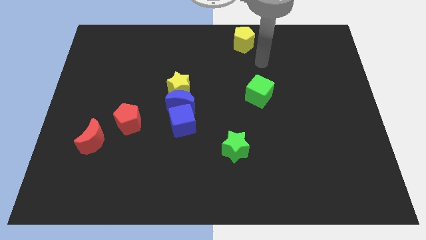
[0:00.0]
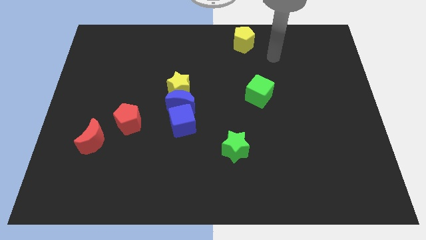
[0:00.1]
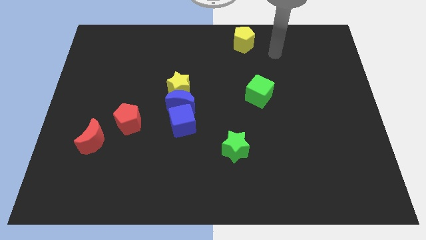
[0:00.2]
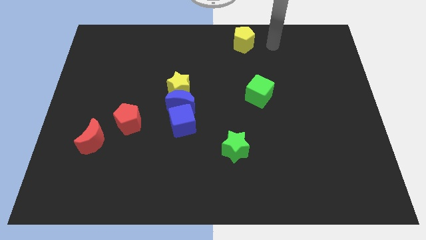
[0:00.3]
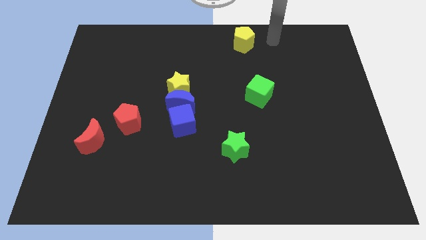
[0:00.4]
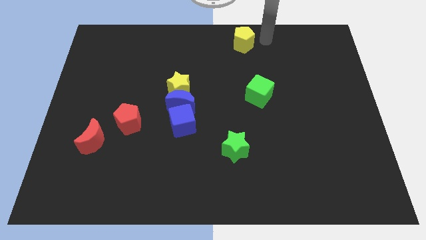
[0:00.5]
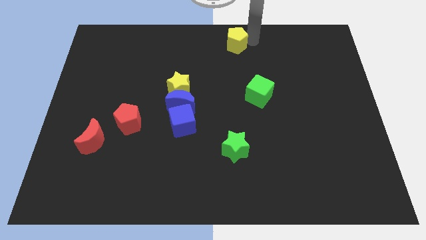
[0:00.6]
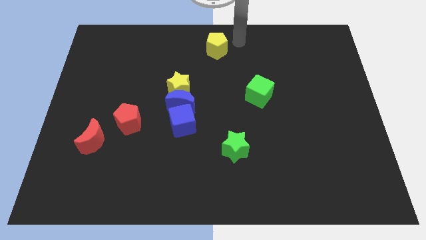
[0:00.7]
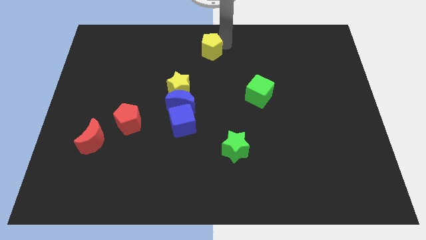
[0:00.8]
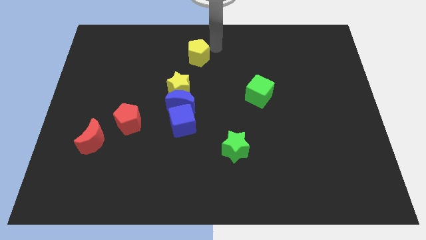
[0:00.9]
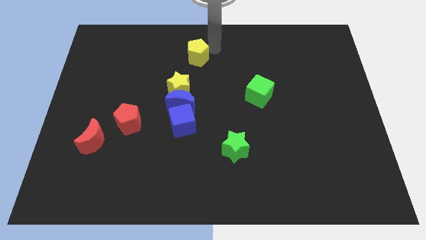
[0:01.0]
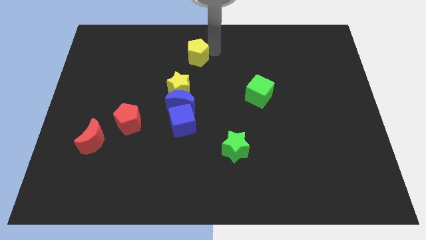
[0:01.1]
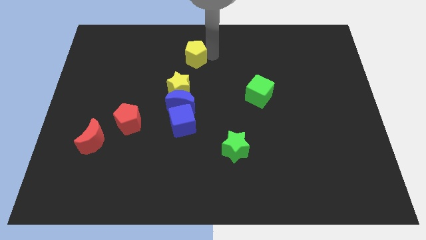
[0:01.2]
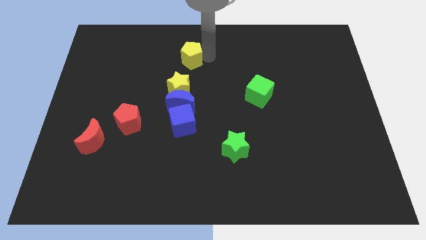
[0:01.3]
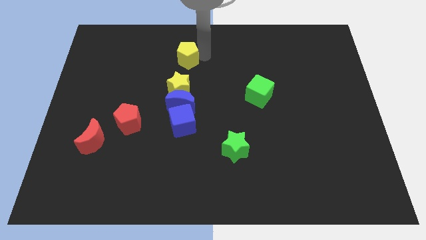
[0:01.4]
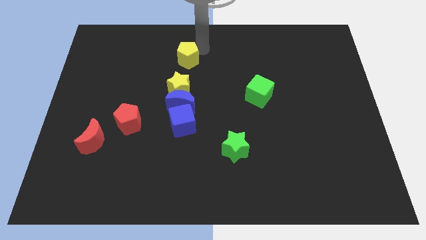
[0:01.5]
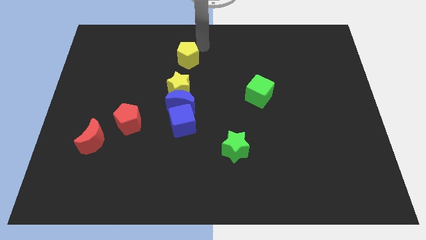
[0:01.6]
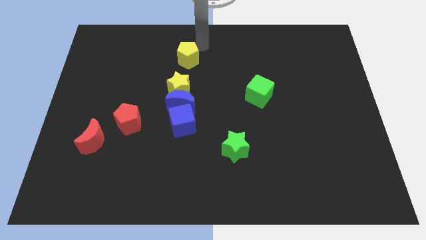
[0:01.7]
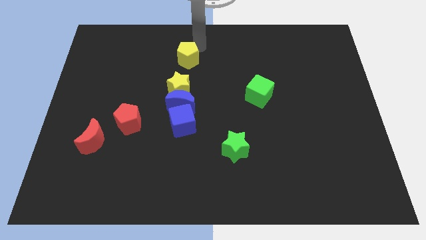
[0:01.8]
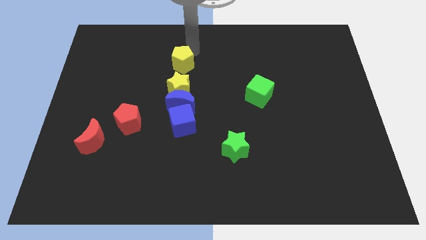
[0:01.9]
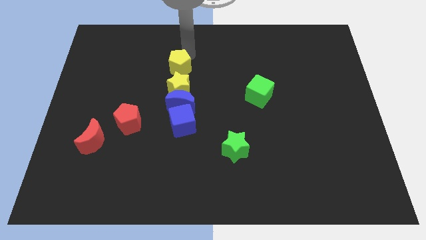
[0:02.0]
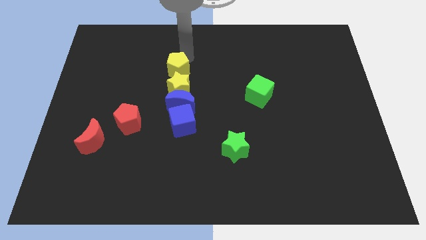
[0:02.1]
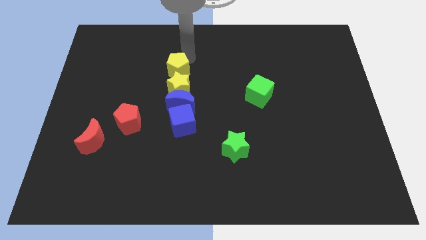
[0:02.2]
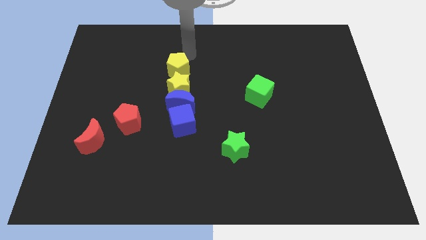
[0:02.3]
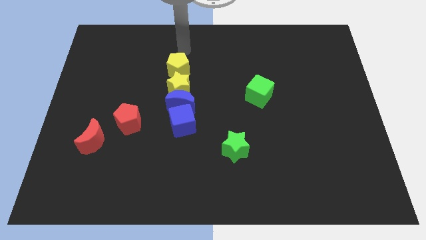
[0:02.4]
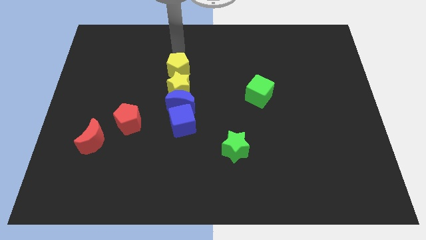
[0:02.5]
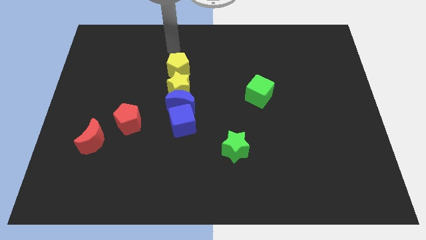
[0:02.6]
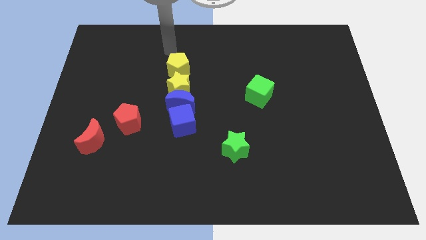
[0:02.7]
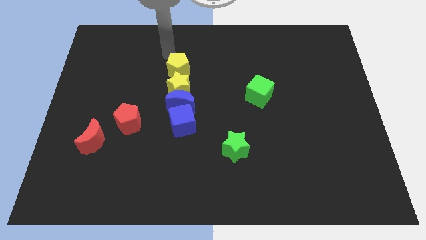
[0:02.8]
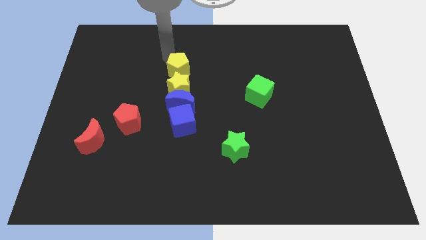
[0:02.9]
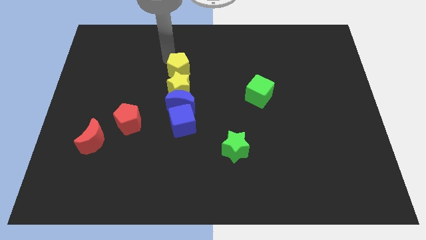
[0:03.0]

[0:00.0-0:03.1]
place yellow pentagon above yellow star

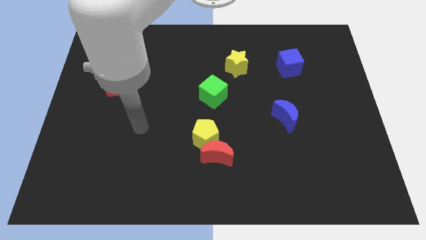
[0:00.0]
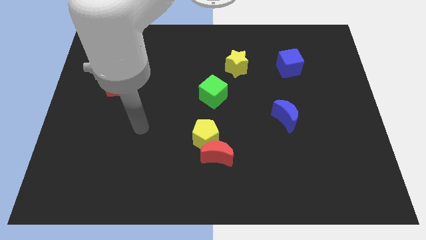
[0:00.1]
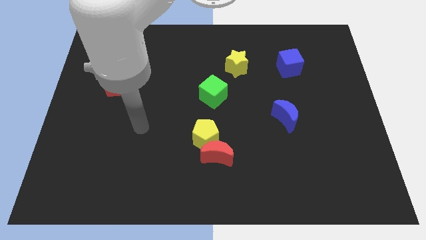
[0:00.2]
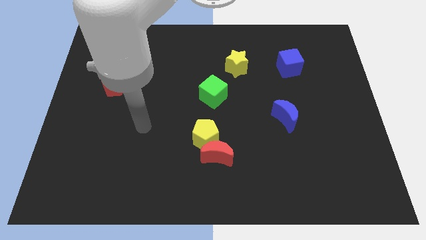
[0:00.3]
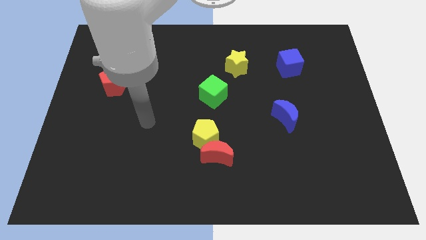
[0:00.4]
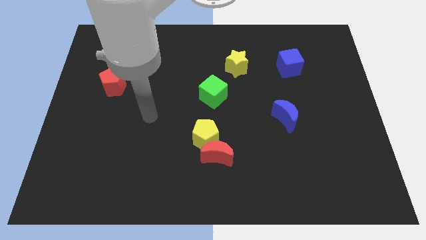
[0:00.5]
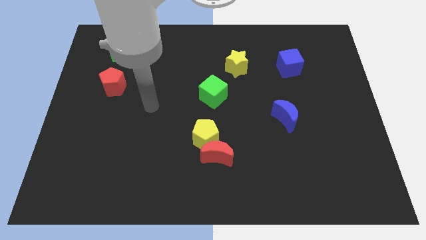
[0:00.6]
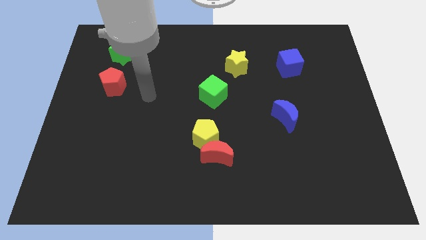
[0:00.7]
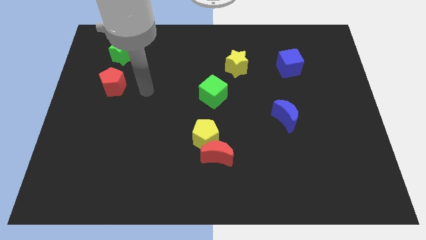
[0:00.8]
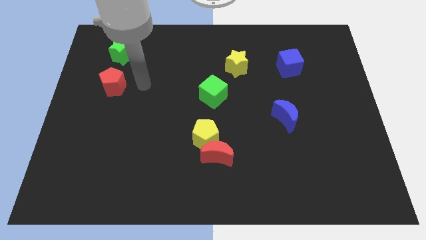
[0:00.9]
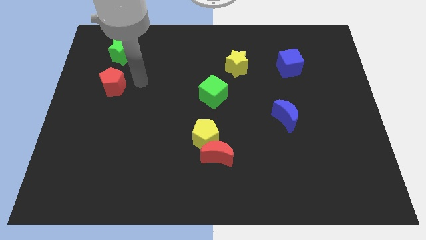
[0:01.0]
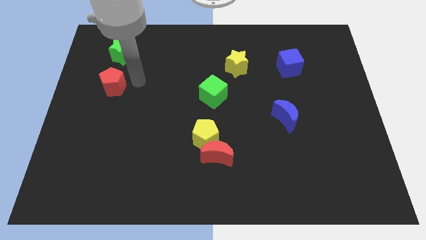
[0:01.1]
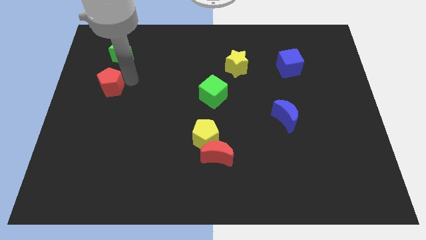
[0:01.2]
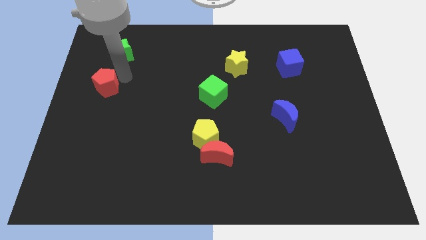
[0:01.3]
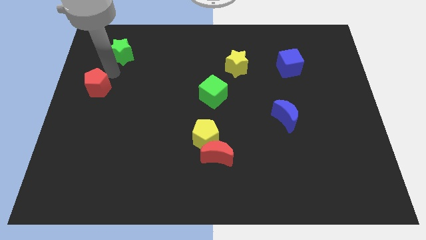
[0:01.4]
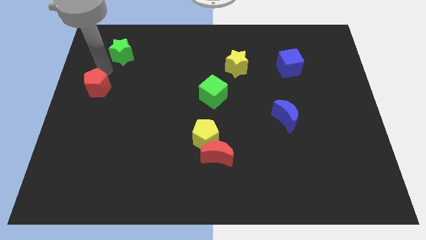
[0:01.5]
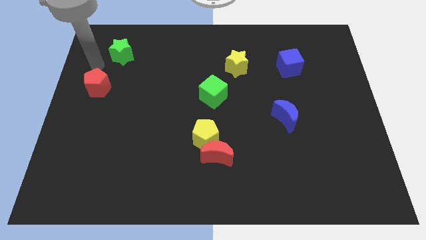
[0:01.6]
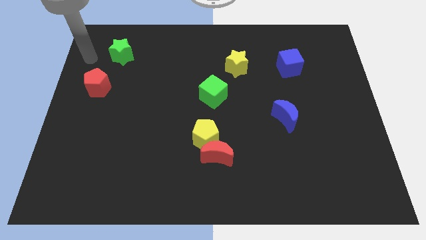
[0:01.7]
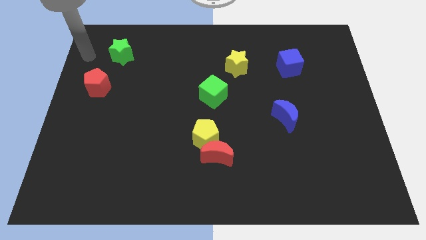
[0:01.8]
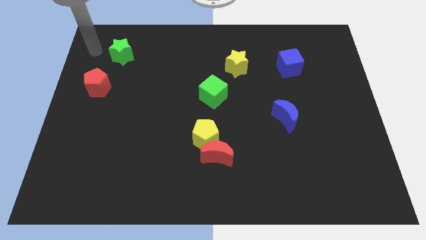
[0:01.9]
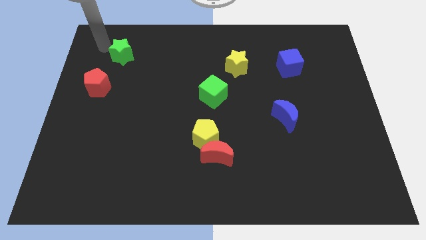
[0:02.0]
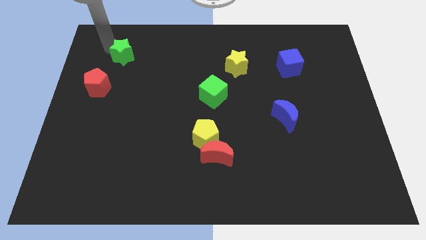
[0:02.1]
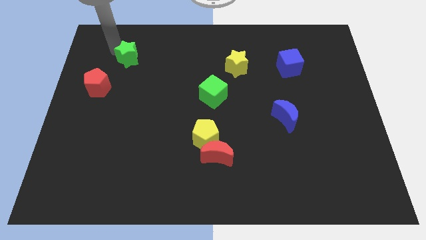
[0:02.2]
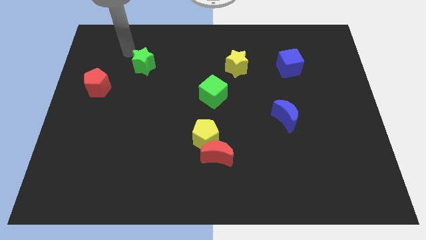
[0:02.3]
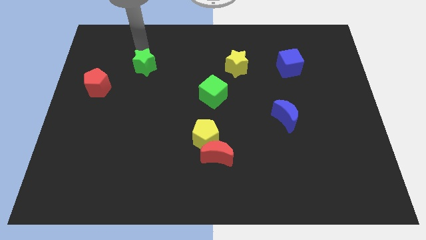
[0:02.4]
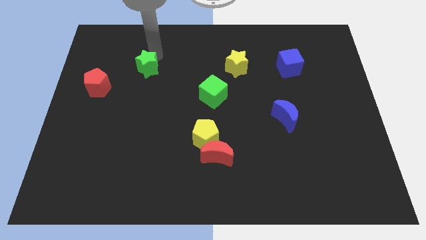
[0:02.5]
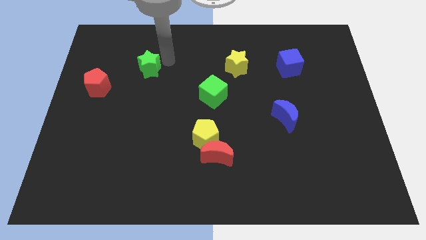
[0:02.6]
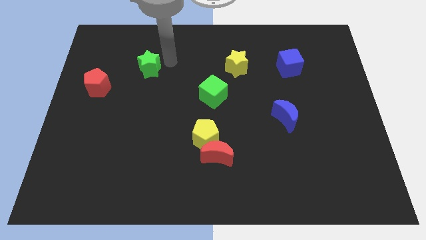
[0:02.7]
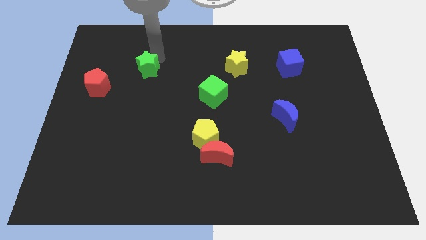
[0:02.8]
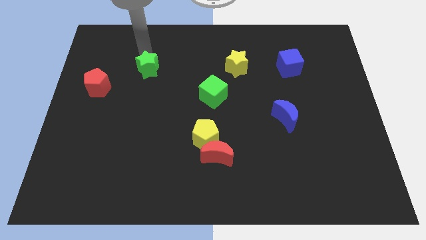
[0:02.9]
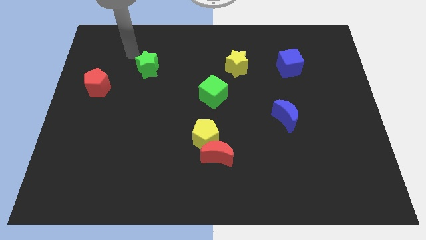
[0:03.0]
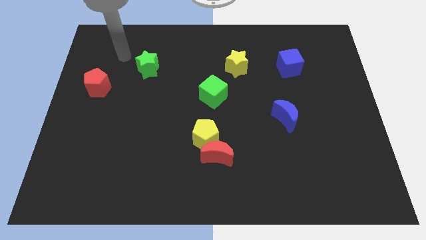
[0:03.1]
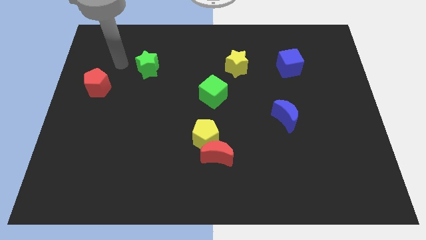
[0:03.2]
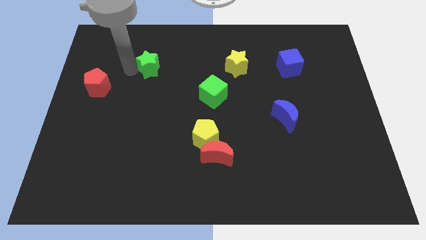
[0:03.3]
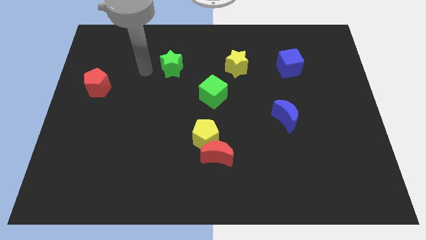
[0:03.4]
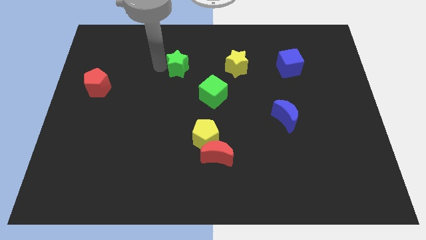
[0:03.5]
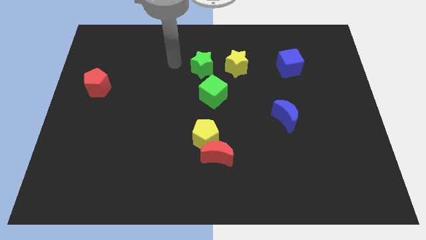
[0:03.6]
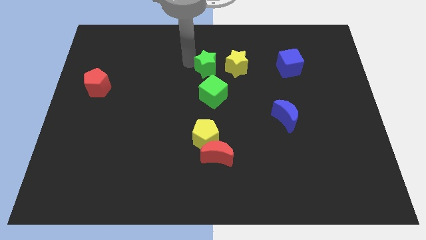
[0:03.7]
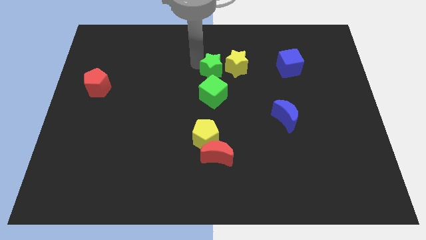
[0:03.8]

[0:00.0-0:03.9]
push the red pentagon and green star in opposite directions

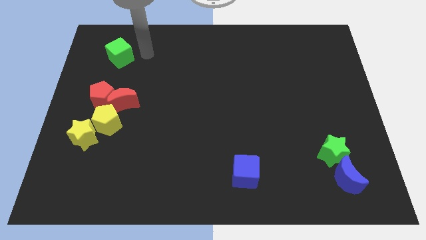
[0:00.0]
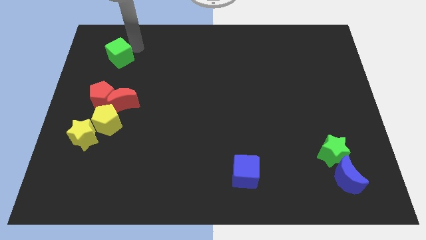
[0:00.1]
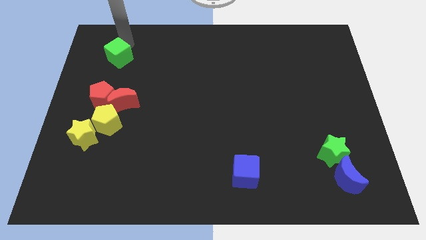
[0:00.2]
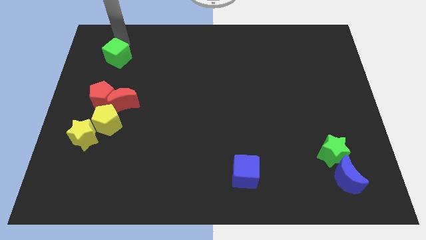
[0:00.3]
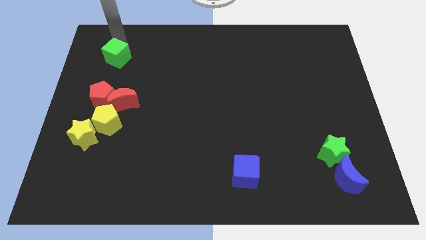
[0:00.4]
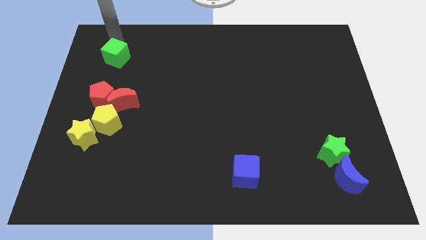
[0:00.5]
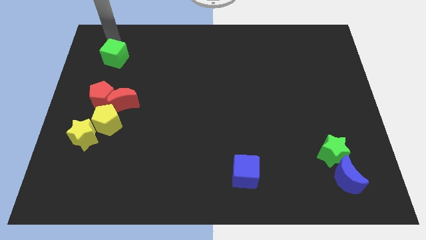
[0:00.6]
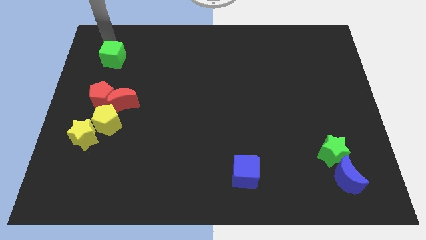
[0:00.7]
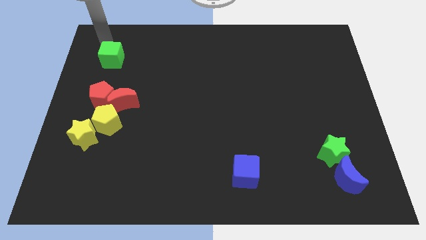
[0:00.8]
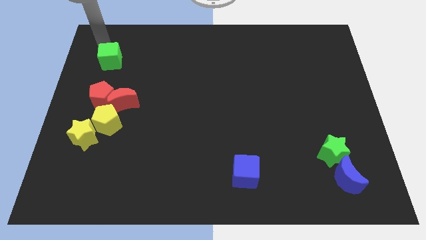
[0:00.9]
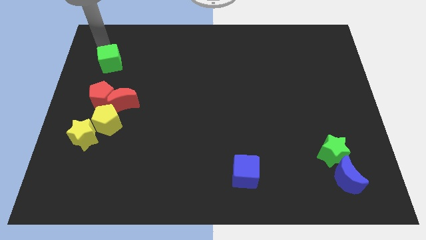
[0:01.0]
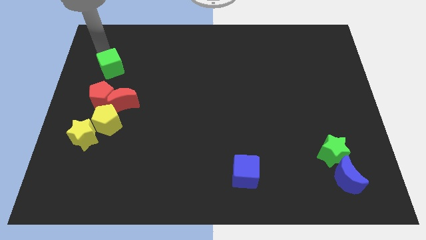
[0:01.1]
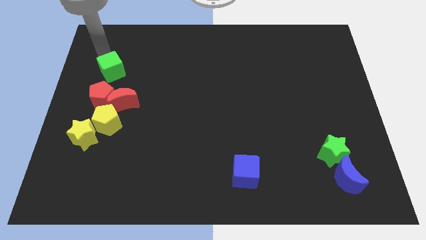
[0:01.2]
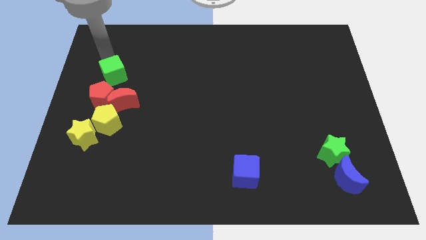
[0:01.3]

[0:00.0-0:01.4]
push the green cube towards the red pentagon

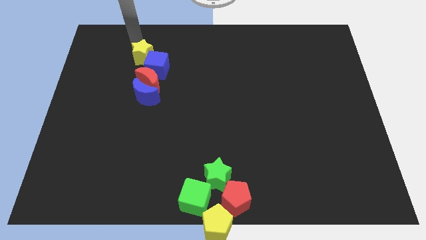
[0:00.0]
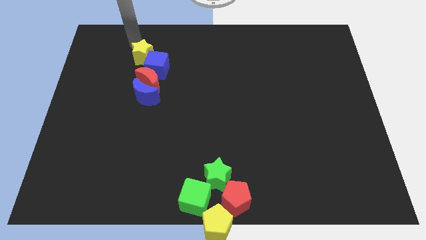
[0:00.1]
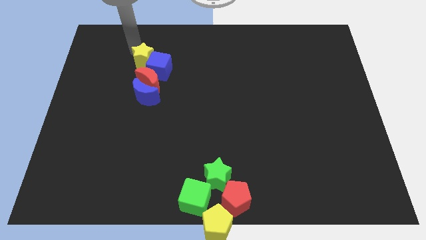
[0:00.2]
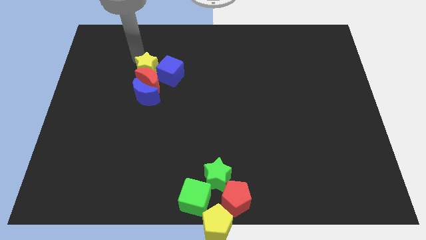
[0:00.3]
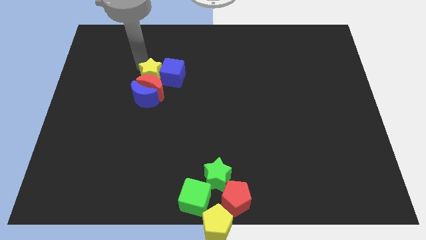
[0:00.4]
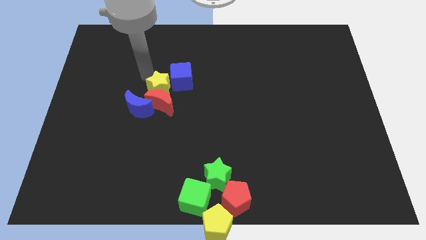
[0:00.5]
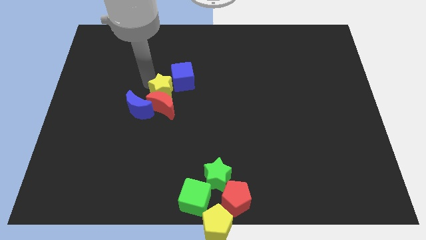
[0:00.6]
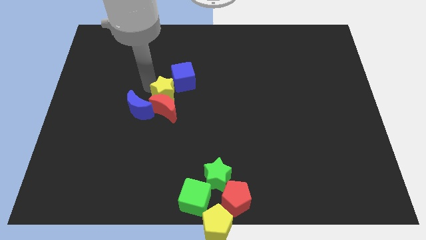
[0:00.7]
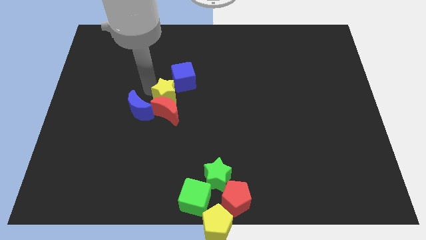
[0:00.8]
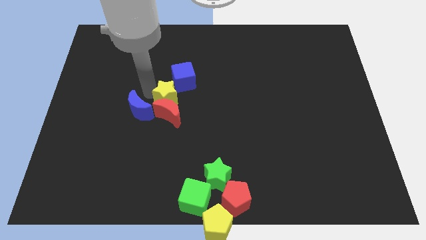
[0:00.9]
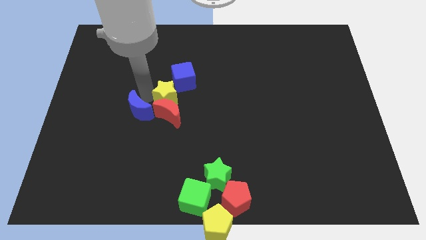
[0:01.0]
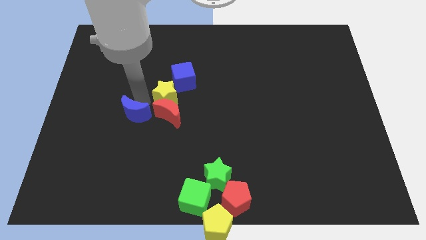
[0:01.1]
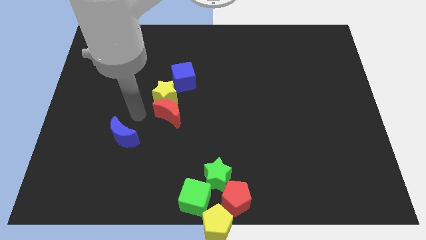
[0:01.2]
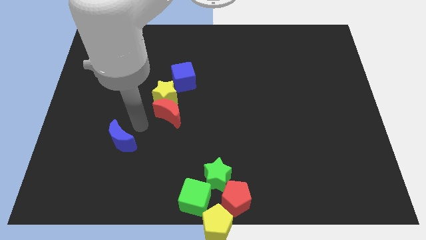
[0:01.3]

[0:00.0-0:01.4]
move group of objects to the center of the board
